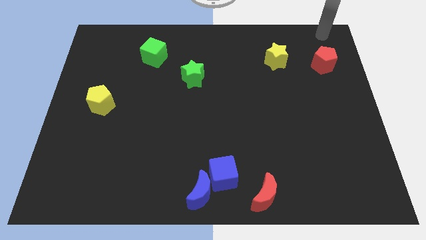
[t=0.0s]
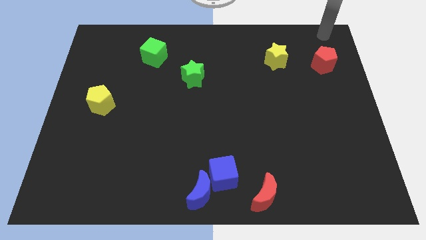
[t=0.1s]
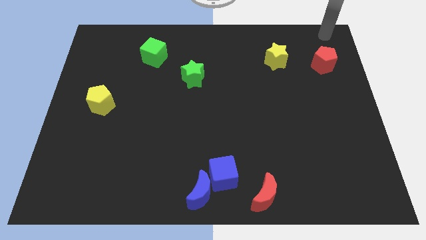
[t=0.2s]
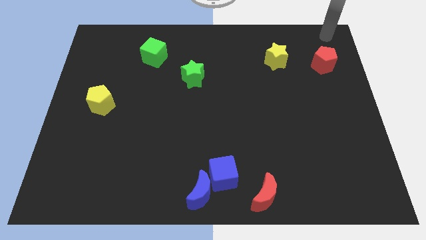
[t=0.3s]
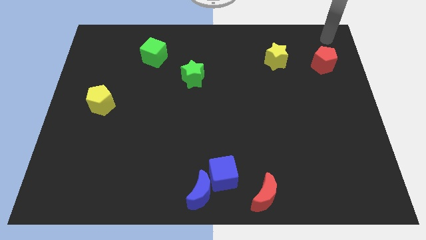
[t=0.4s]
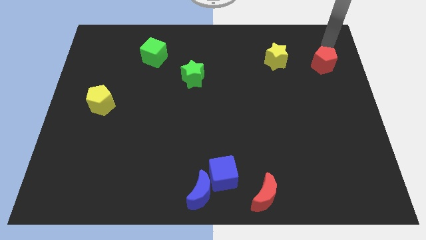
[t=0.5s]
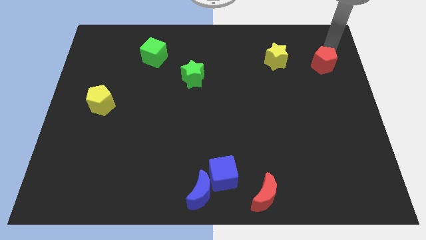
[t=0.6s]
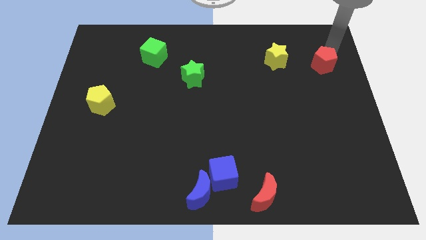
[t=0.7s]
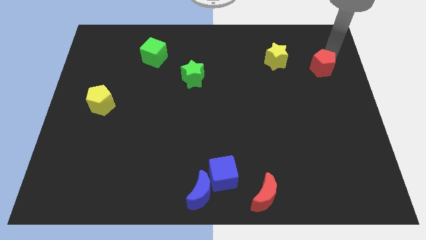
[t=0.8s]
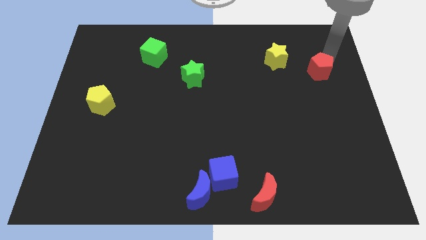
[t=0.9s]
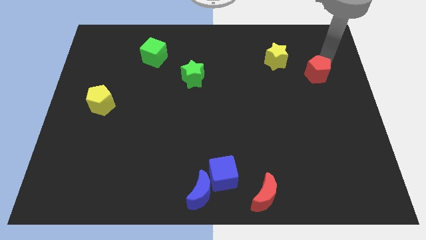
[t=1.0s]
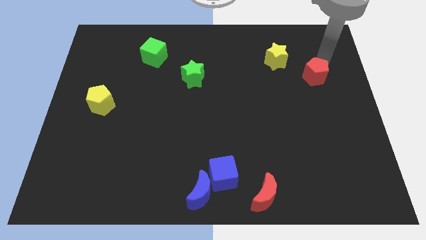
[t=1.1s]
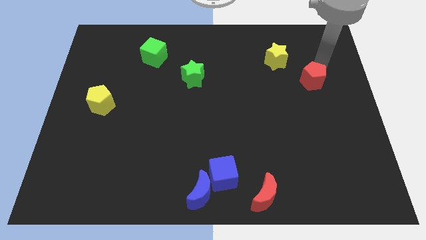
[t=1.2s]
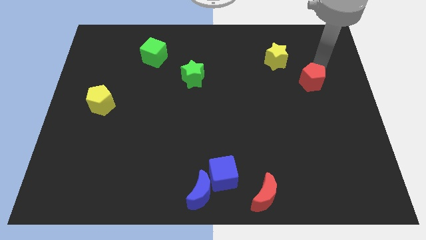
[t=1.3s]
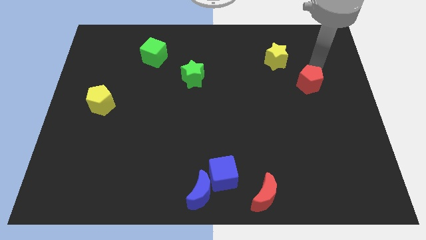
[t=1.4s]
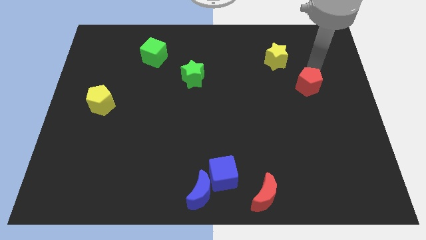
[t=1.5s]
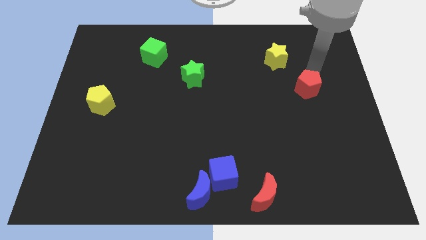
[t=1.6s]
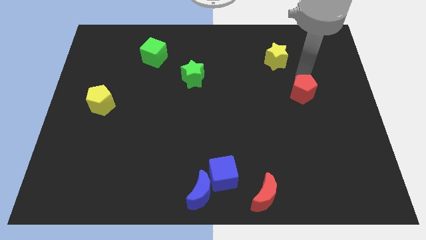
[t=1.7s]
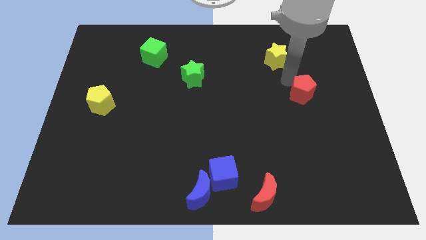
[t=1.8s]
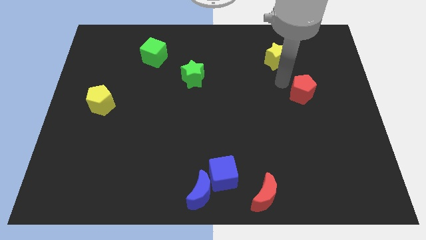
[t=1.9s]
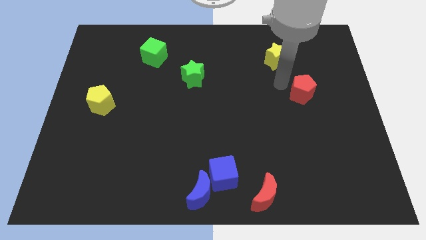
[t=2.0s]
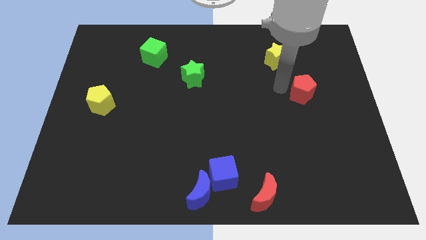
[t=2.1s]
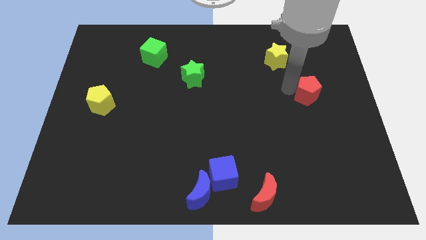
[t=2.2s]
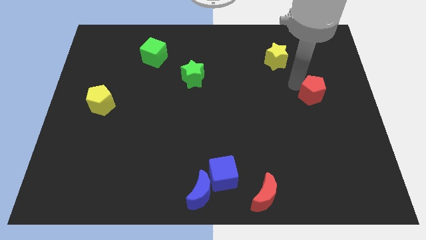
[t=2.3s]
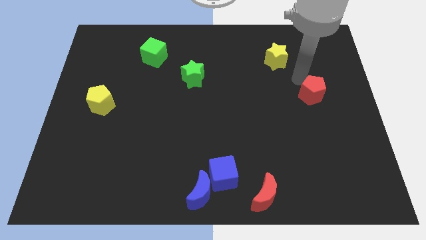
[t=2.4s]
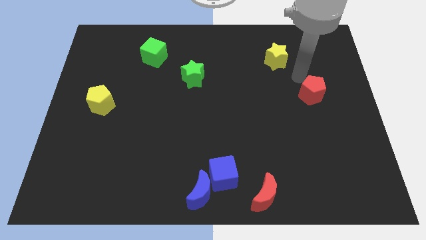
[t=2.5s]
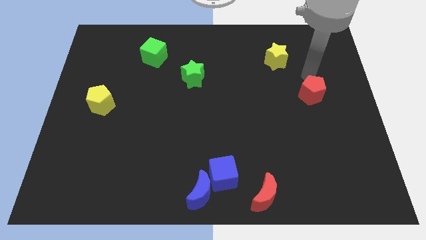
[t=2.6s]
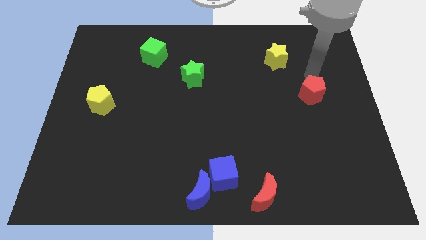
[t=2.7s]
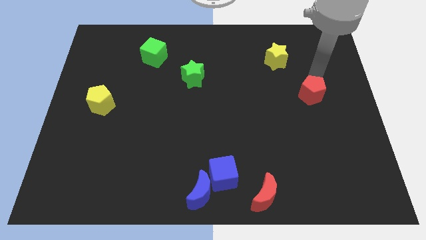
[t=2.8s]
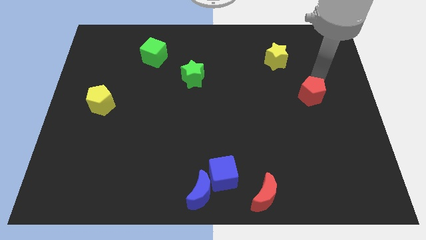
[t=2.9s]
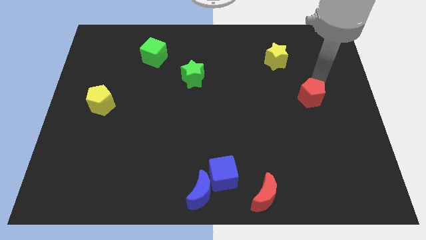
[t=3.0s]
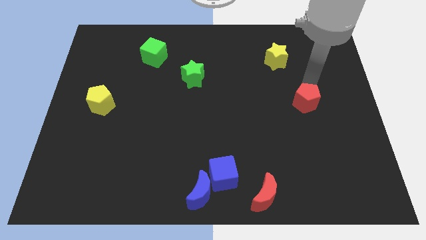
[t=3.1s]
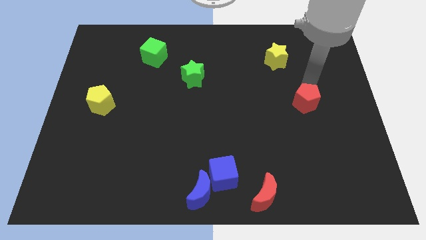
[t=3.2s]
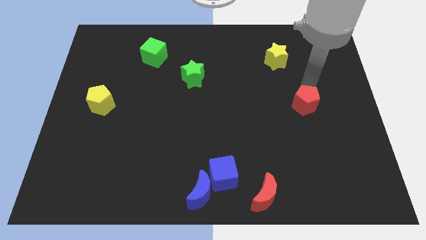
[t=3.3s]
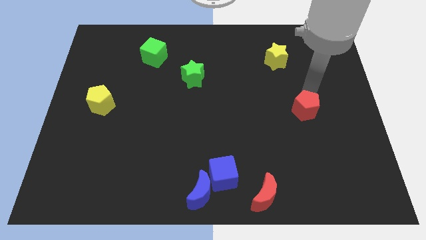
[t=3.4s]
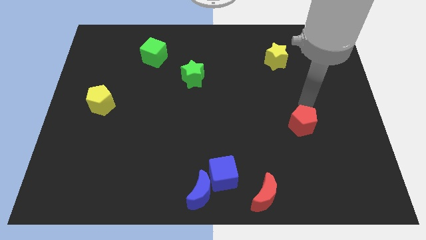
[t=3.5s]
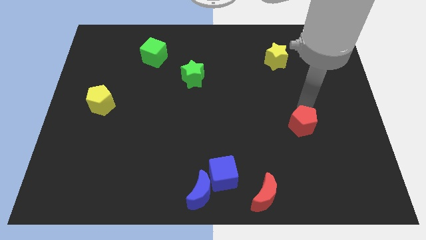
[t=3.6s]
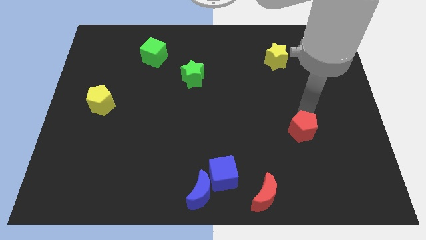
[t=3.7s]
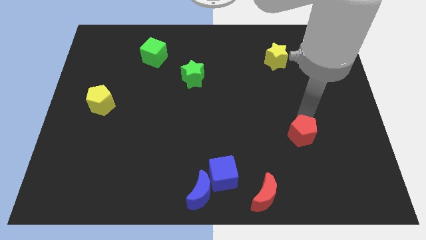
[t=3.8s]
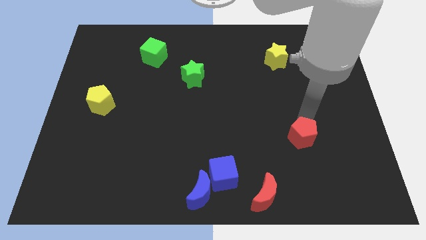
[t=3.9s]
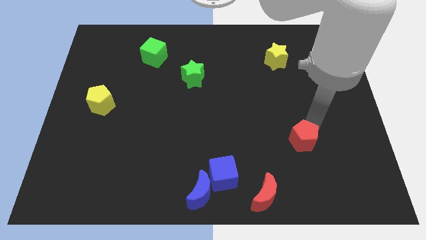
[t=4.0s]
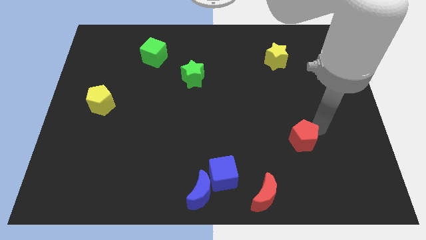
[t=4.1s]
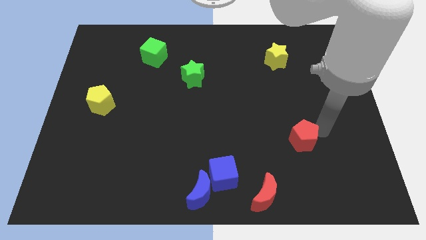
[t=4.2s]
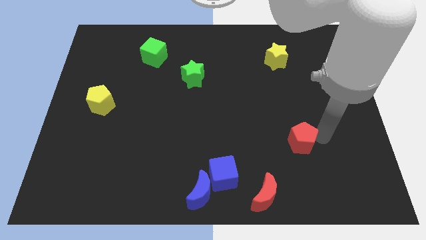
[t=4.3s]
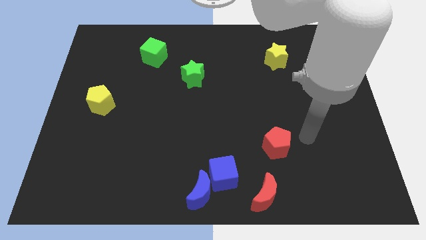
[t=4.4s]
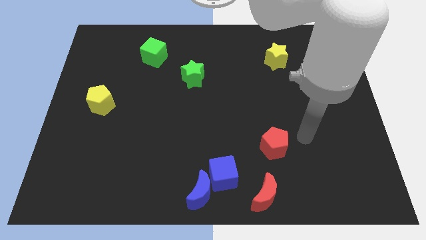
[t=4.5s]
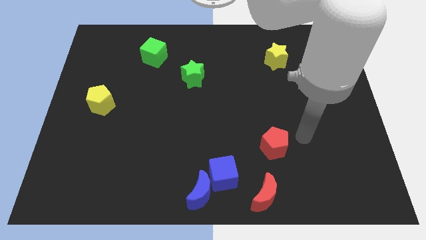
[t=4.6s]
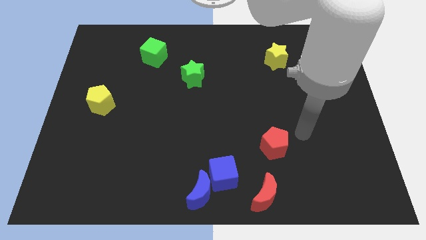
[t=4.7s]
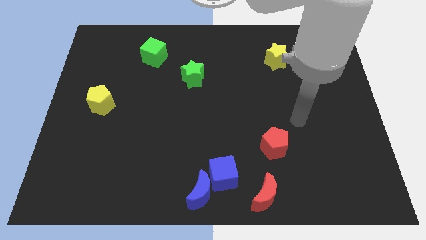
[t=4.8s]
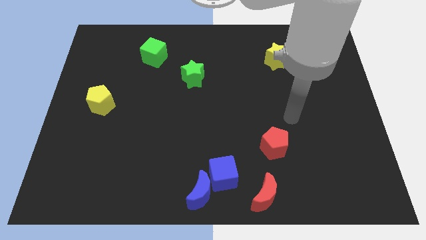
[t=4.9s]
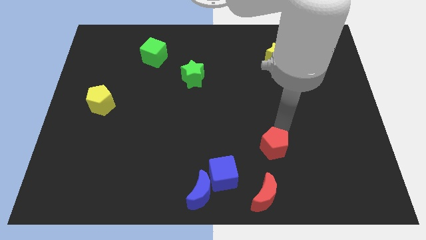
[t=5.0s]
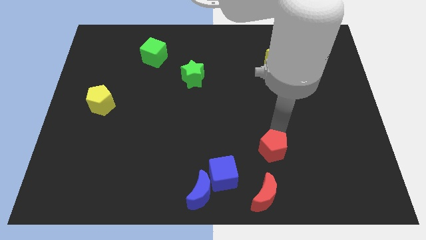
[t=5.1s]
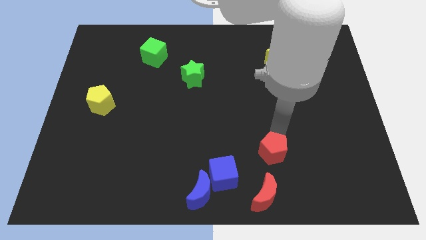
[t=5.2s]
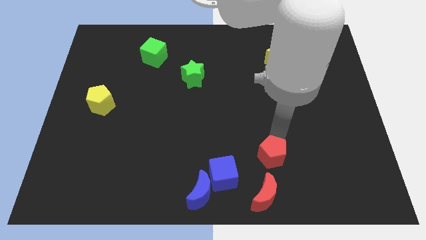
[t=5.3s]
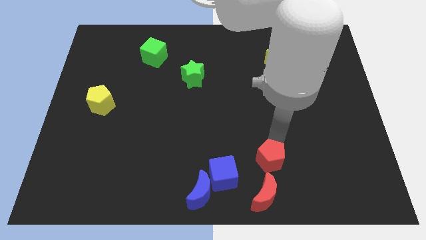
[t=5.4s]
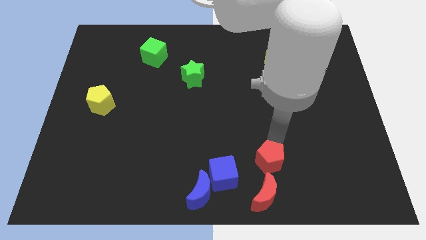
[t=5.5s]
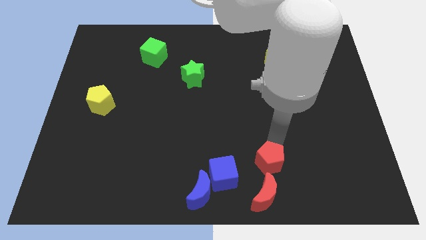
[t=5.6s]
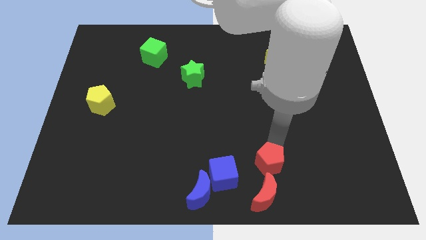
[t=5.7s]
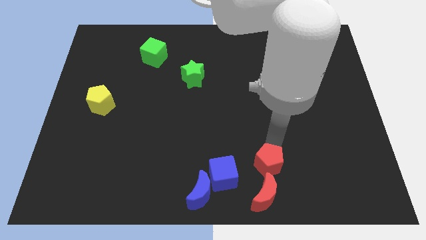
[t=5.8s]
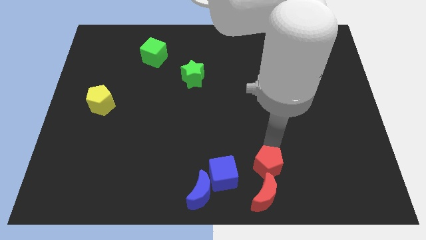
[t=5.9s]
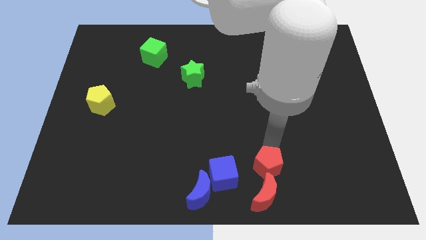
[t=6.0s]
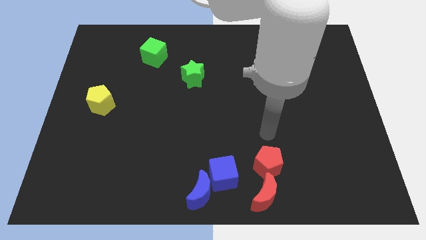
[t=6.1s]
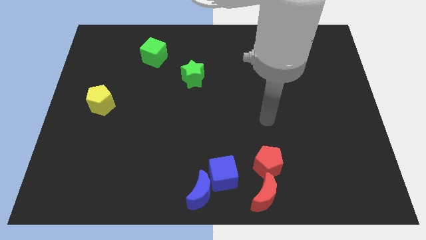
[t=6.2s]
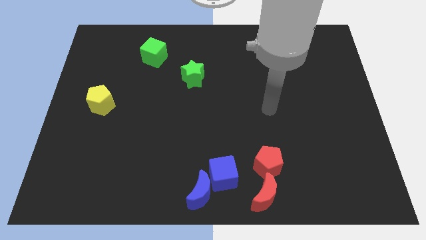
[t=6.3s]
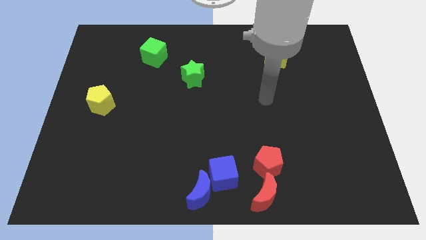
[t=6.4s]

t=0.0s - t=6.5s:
push the red pentagon to the top of red moon

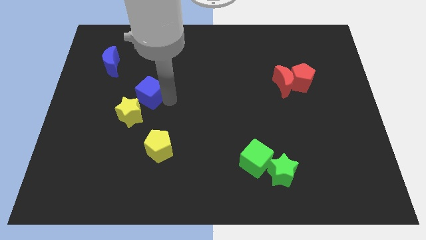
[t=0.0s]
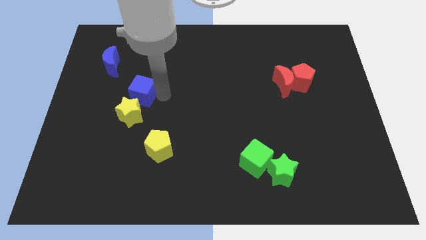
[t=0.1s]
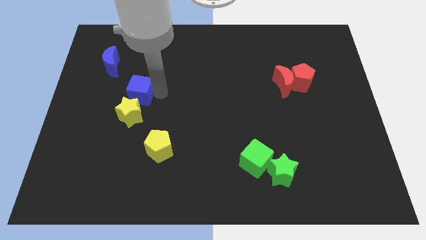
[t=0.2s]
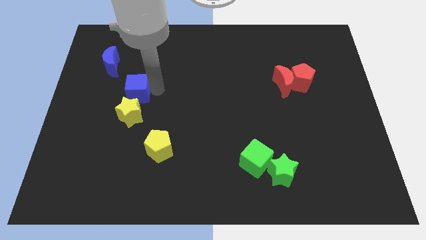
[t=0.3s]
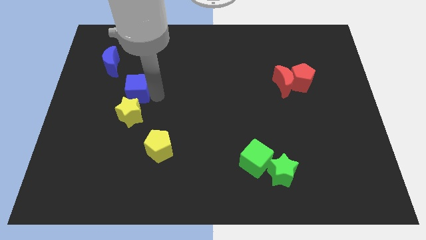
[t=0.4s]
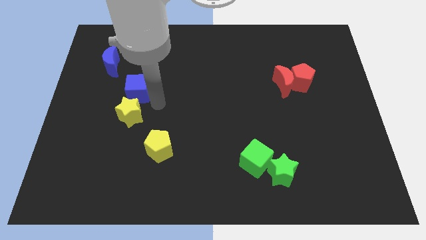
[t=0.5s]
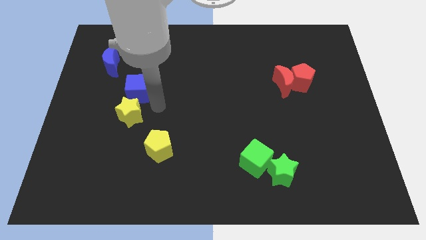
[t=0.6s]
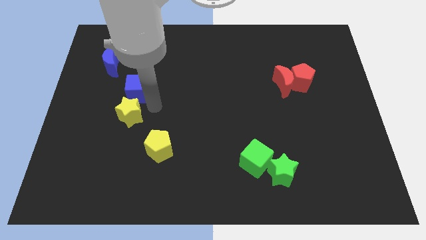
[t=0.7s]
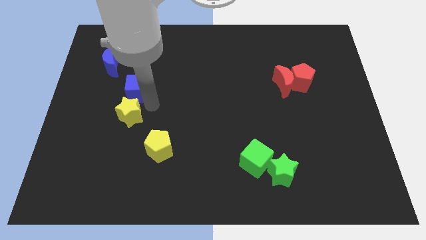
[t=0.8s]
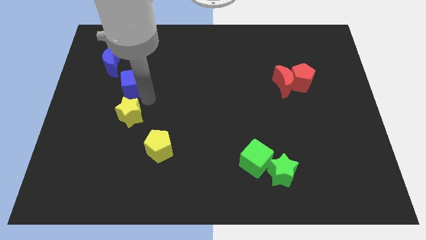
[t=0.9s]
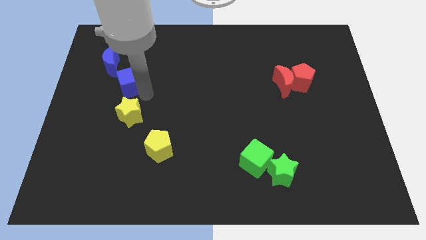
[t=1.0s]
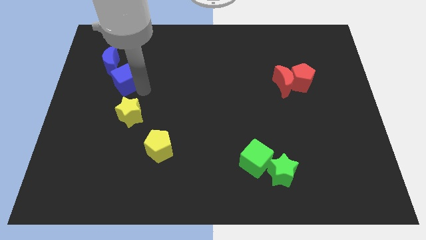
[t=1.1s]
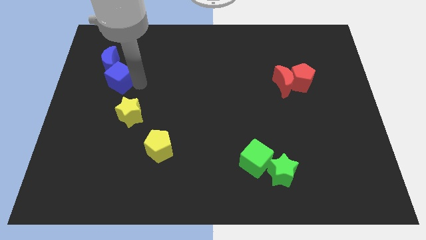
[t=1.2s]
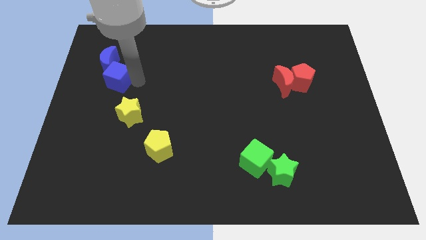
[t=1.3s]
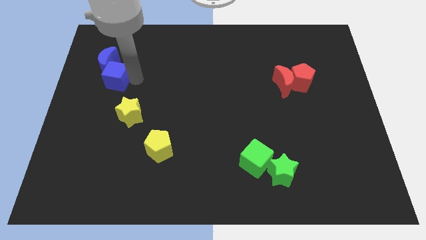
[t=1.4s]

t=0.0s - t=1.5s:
push the blue cube into the blue moon

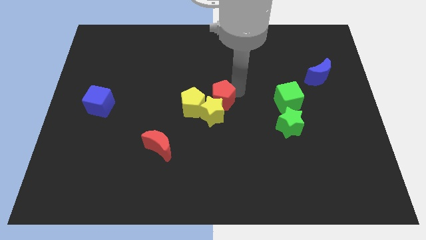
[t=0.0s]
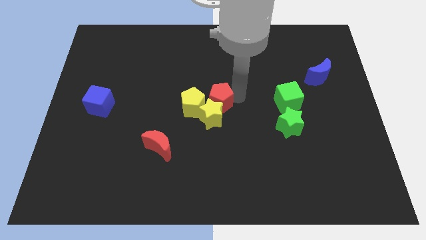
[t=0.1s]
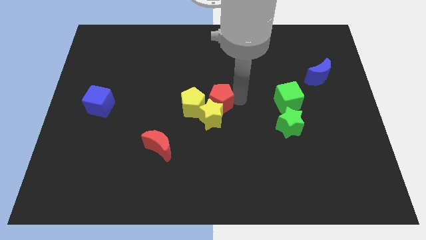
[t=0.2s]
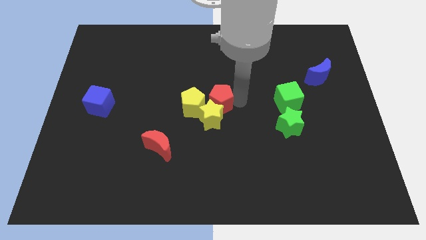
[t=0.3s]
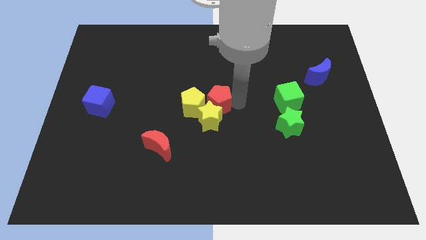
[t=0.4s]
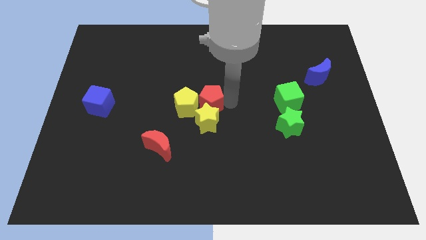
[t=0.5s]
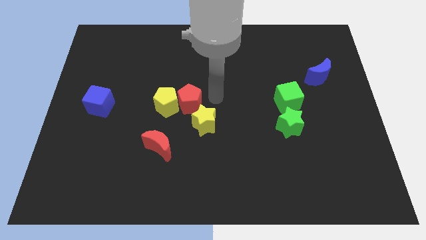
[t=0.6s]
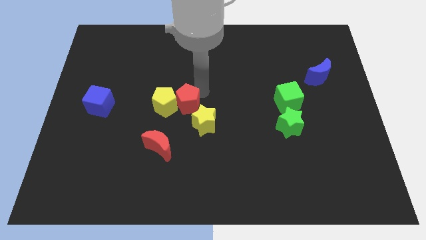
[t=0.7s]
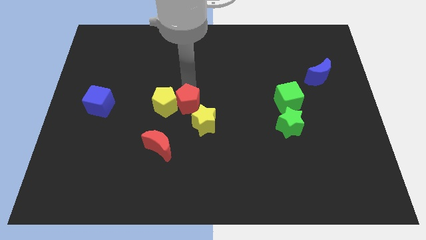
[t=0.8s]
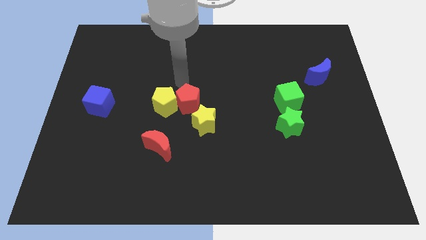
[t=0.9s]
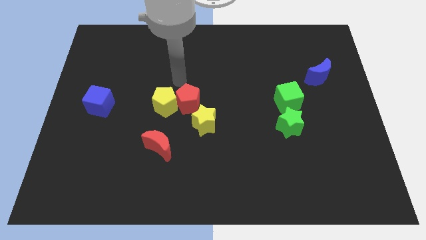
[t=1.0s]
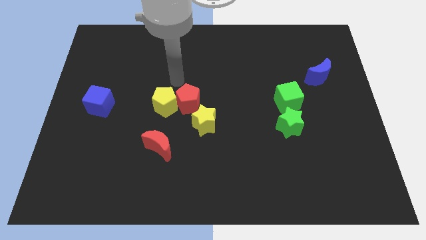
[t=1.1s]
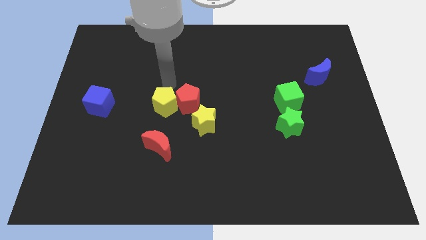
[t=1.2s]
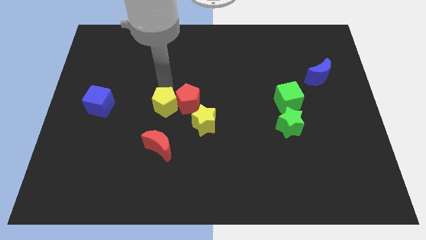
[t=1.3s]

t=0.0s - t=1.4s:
place red pentagon in between two yellow blocks
